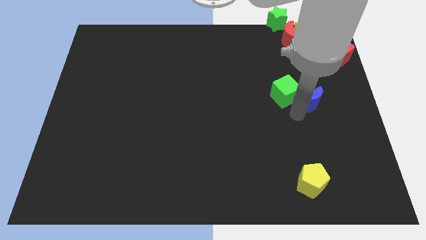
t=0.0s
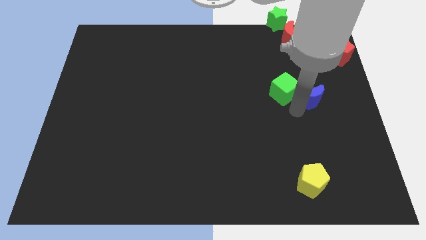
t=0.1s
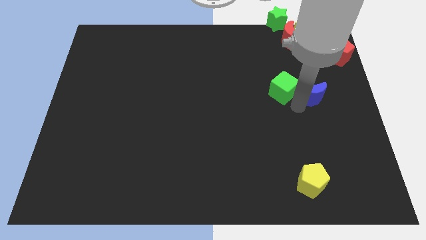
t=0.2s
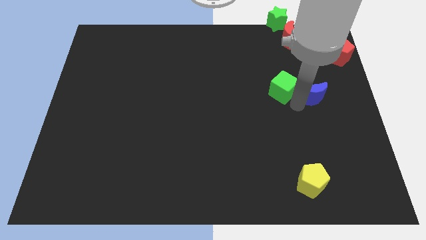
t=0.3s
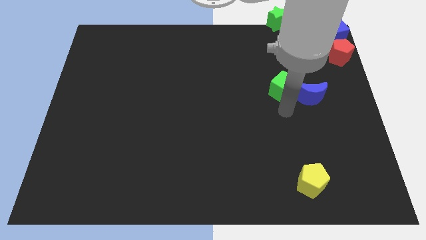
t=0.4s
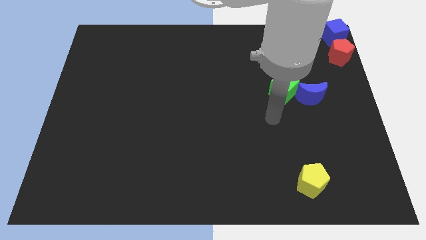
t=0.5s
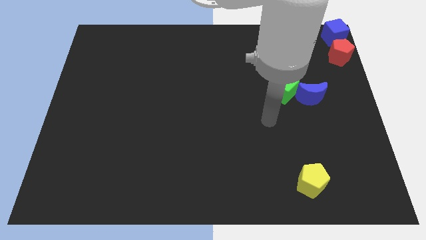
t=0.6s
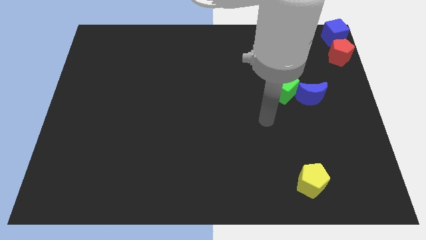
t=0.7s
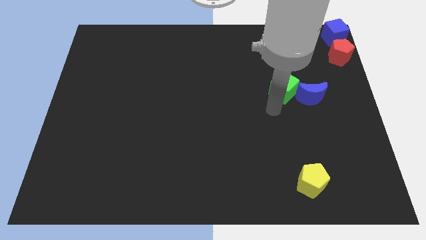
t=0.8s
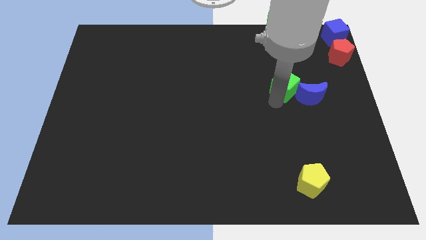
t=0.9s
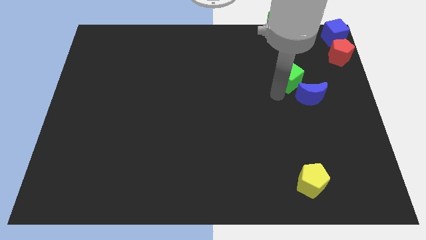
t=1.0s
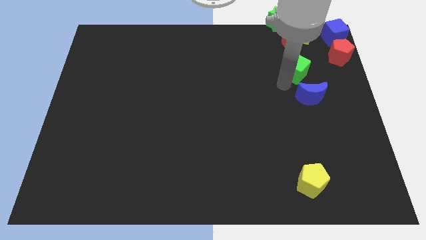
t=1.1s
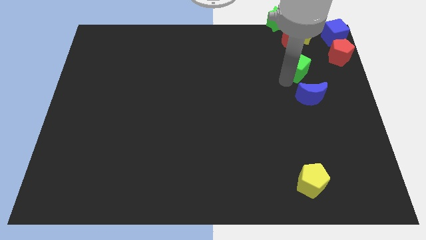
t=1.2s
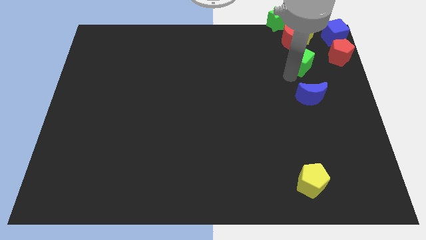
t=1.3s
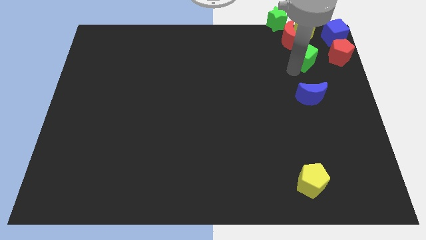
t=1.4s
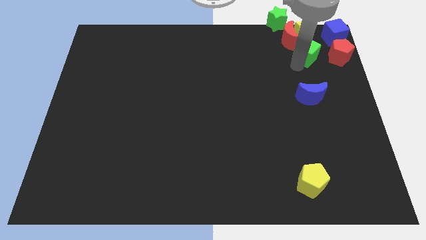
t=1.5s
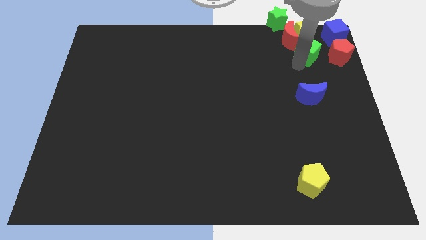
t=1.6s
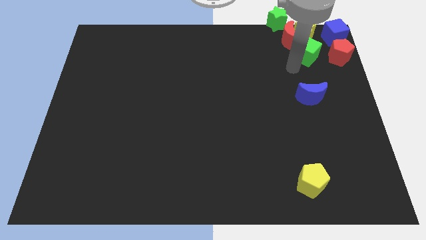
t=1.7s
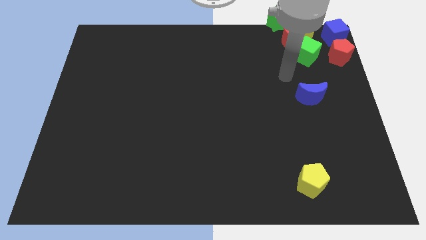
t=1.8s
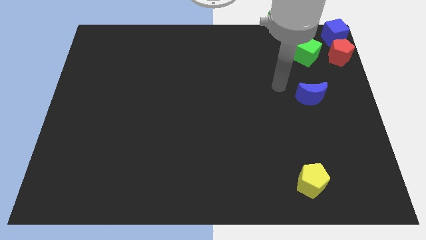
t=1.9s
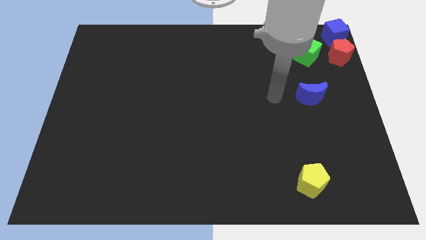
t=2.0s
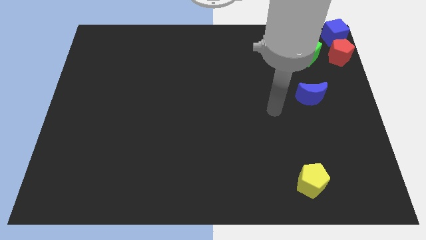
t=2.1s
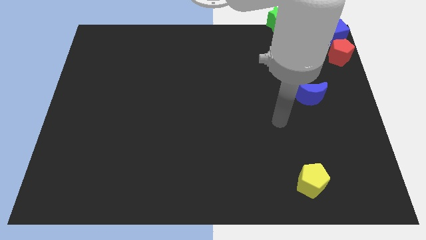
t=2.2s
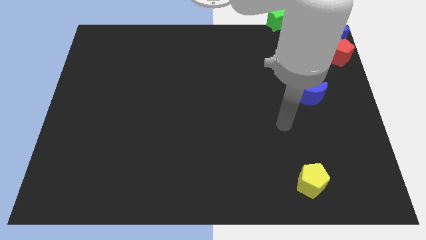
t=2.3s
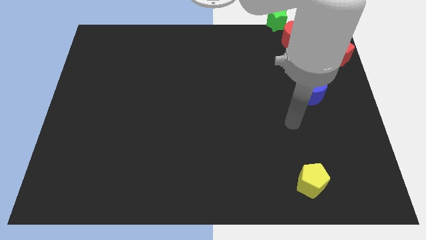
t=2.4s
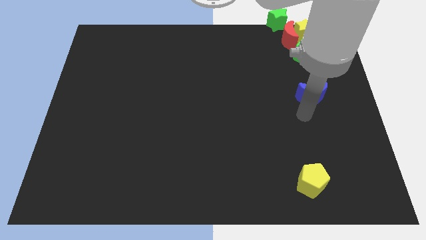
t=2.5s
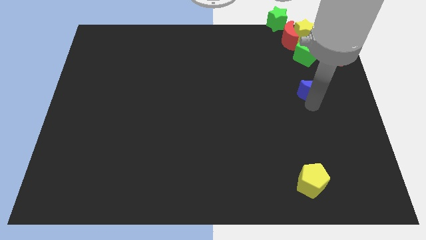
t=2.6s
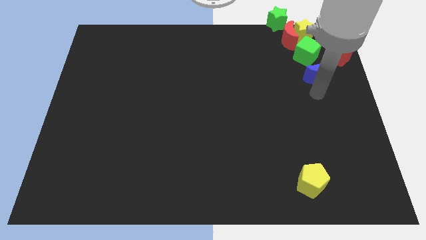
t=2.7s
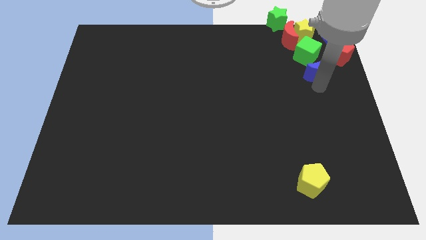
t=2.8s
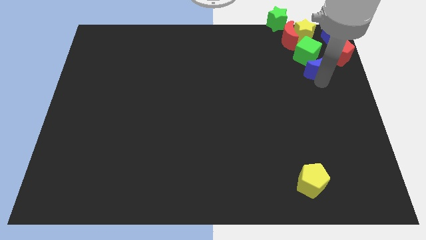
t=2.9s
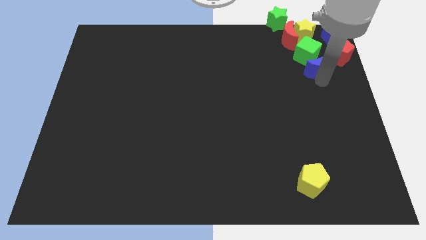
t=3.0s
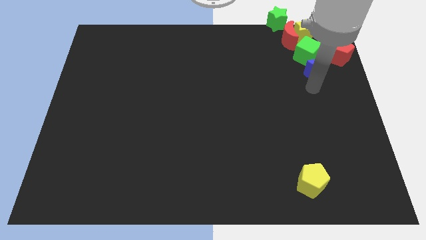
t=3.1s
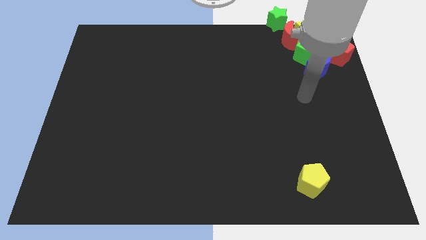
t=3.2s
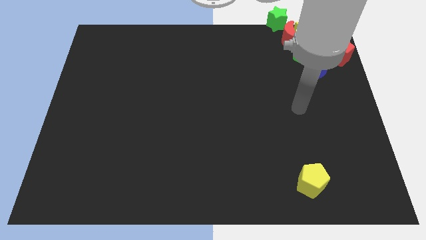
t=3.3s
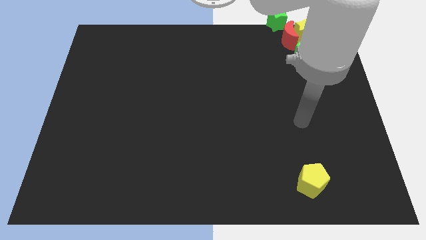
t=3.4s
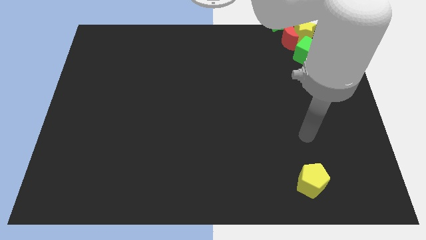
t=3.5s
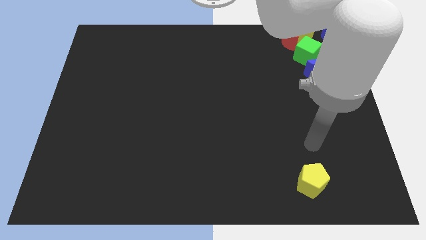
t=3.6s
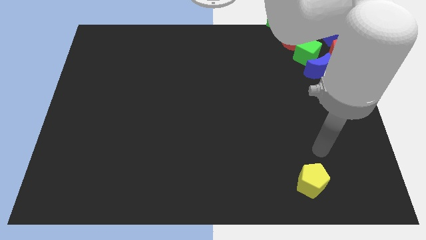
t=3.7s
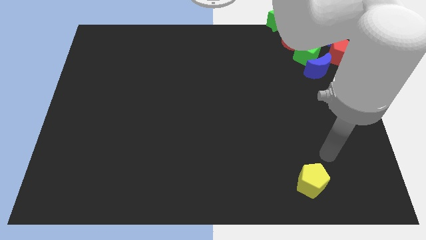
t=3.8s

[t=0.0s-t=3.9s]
push green cube with blue moon in to group of blocks

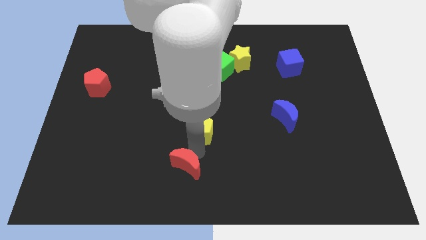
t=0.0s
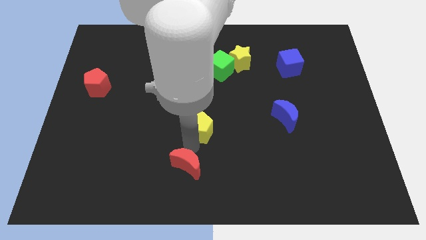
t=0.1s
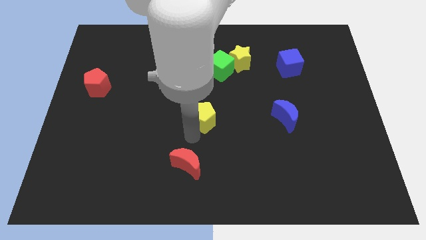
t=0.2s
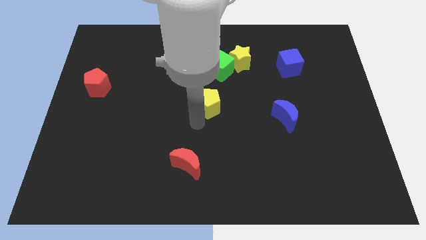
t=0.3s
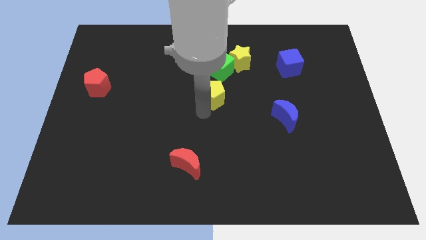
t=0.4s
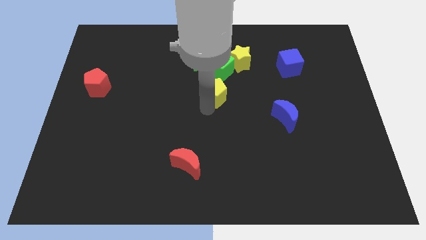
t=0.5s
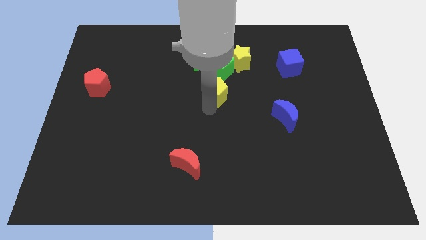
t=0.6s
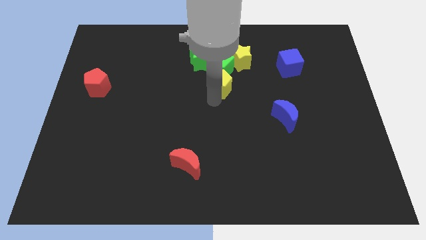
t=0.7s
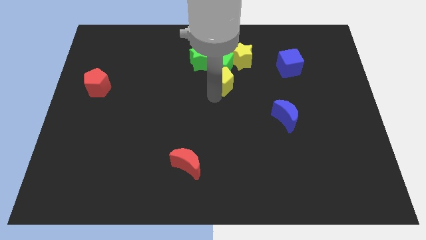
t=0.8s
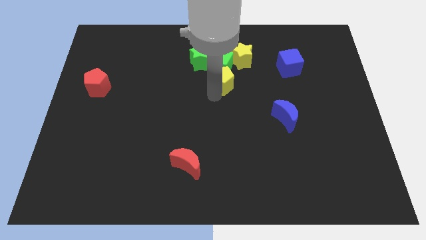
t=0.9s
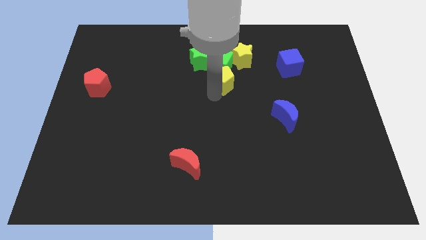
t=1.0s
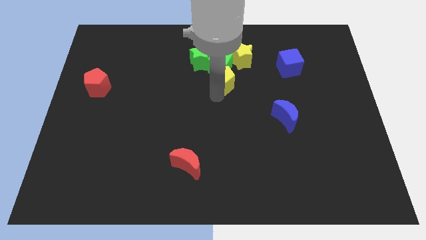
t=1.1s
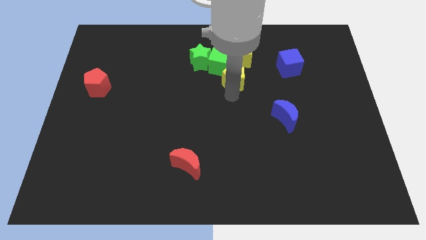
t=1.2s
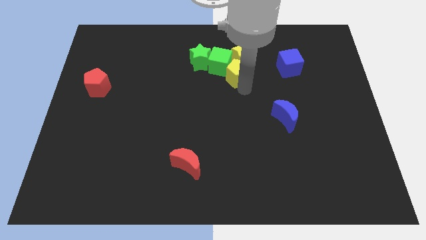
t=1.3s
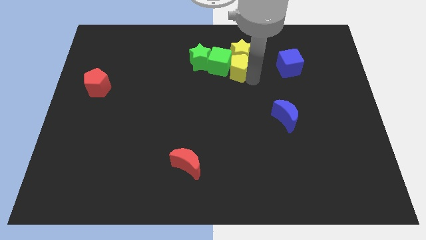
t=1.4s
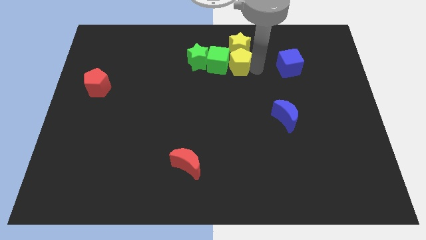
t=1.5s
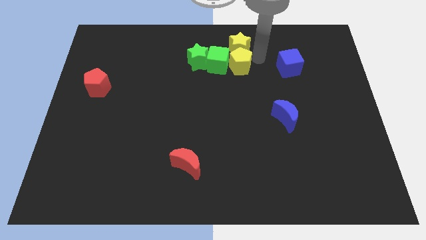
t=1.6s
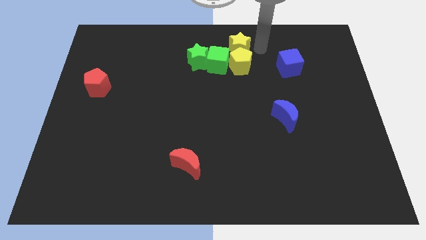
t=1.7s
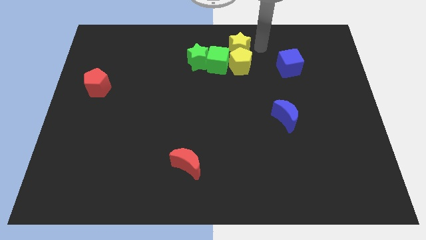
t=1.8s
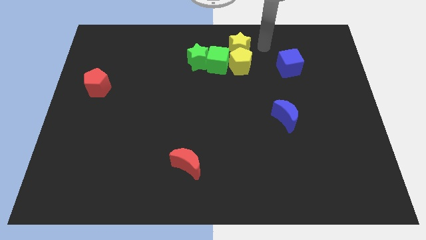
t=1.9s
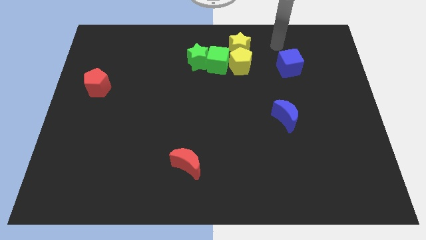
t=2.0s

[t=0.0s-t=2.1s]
place the yellow pentagon into yellow star at the bottom

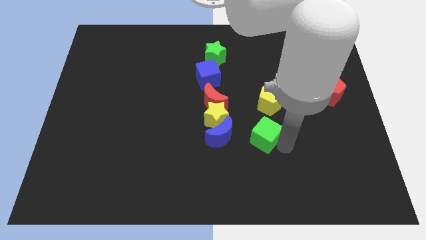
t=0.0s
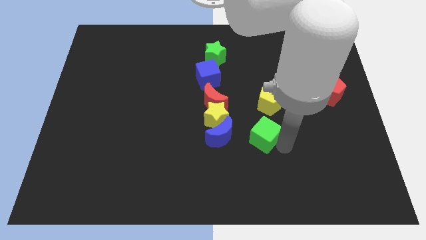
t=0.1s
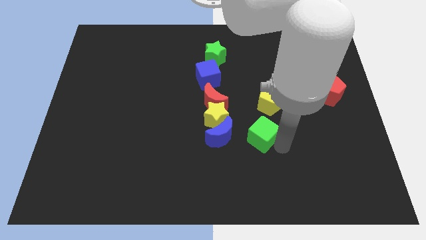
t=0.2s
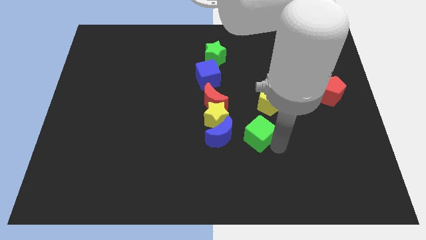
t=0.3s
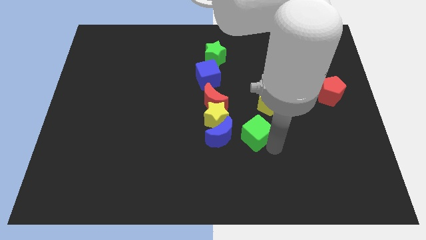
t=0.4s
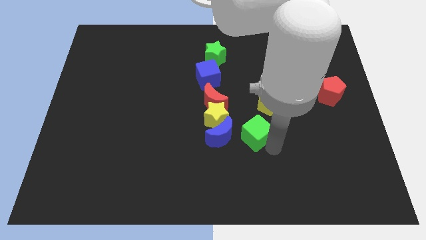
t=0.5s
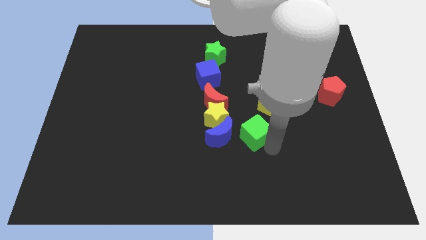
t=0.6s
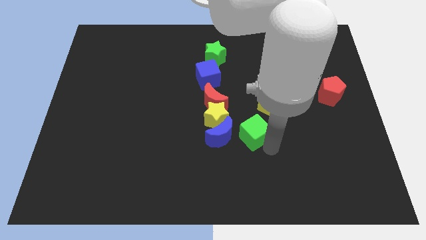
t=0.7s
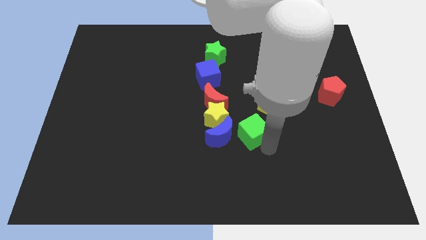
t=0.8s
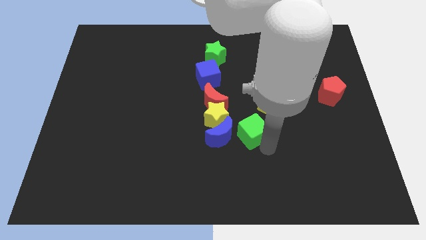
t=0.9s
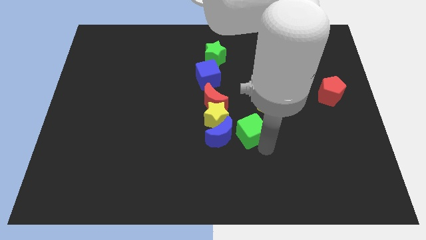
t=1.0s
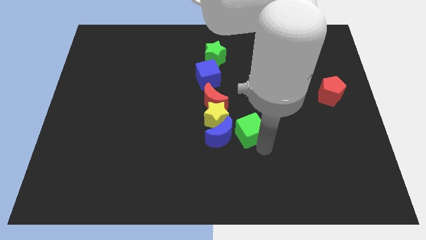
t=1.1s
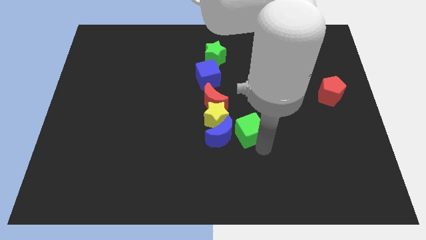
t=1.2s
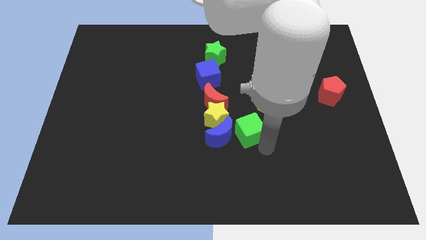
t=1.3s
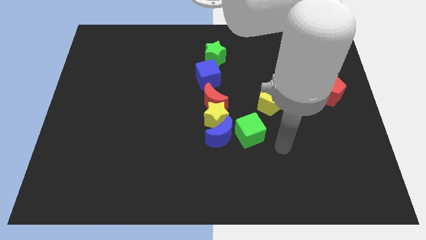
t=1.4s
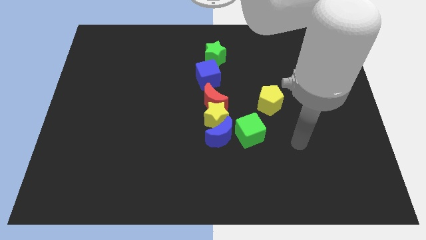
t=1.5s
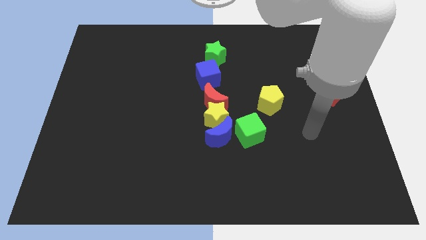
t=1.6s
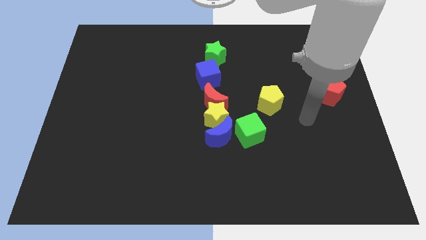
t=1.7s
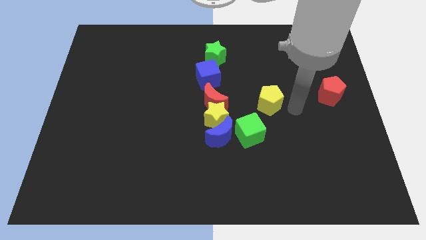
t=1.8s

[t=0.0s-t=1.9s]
push the green cube to the right of the blue crescent

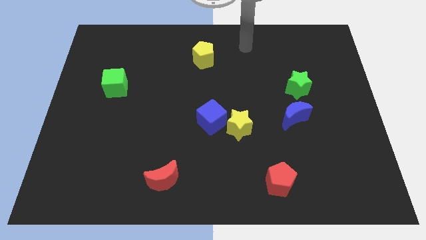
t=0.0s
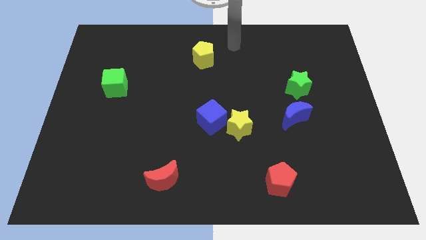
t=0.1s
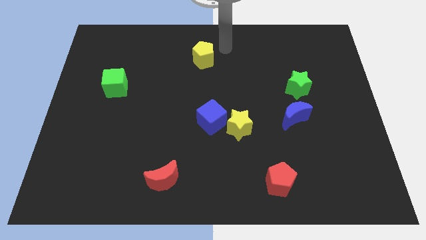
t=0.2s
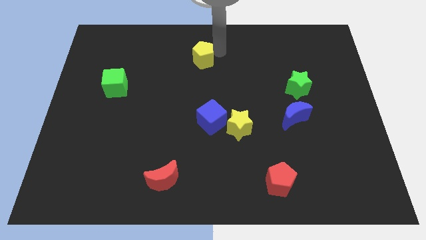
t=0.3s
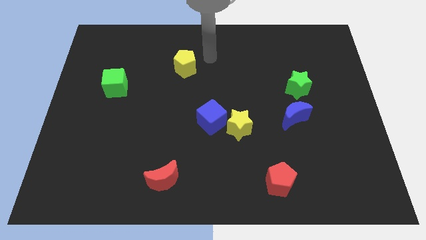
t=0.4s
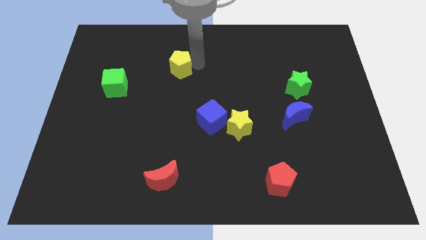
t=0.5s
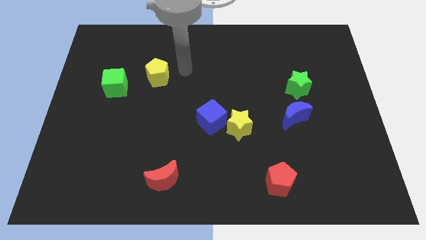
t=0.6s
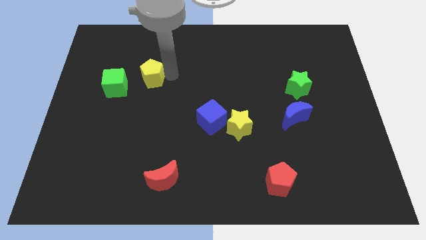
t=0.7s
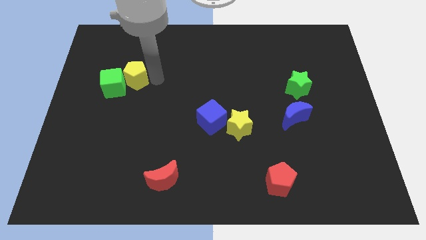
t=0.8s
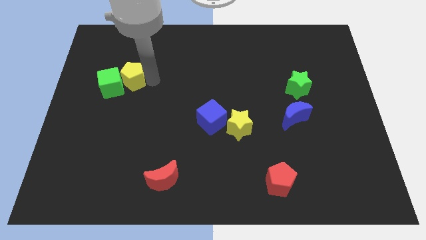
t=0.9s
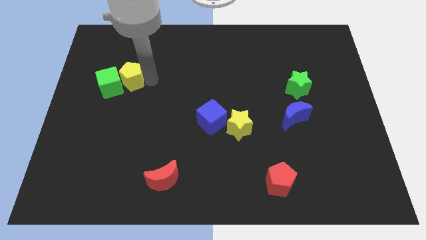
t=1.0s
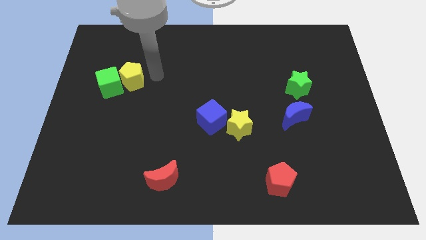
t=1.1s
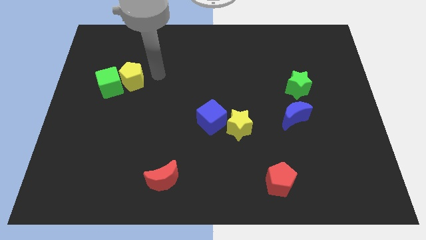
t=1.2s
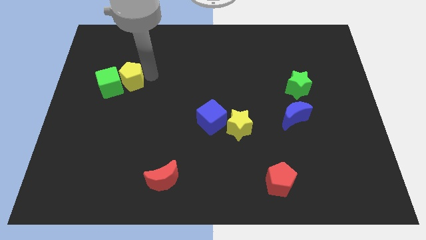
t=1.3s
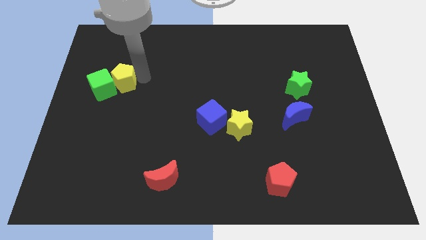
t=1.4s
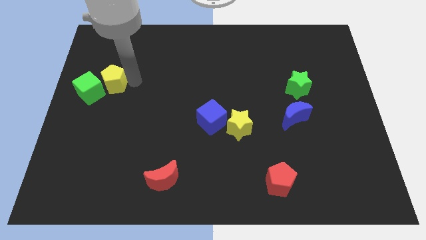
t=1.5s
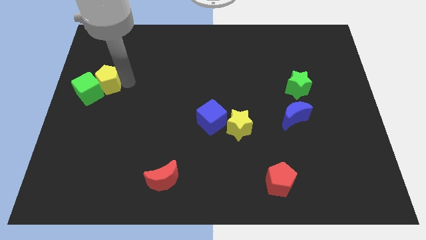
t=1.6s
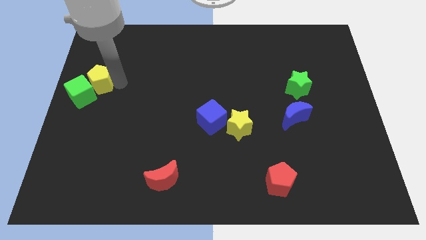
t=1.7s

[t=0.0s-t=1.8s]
place the green cube along the yellow pentagon towards the left center of the board
